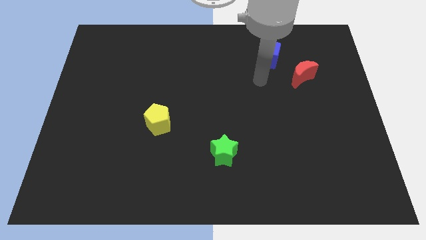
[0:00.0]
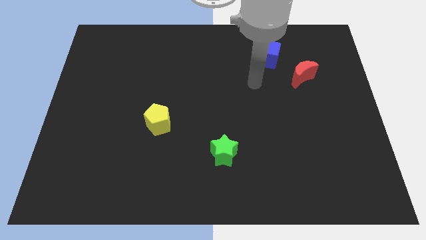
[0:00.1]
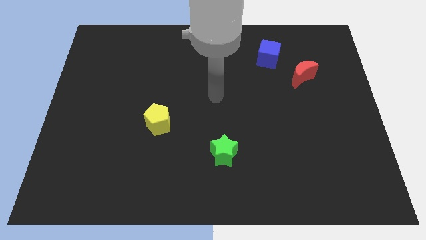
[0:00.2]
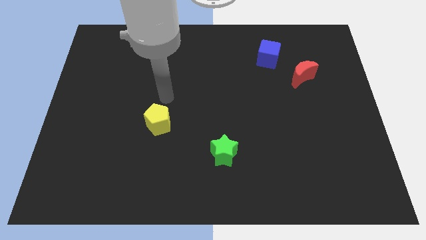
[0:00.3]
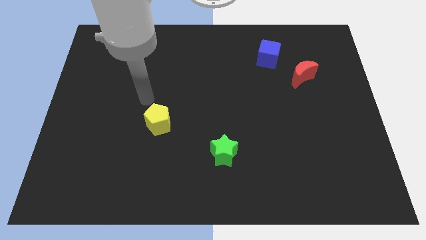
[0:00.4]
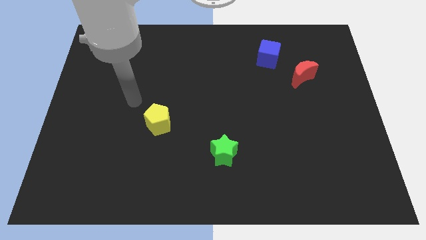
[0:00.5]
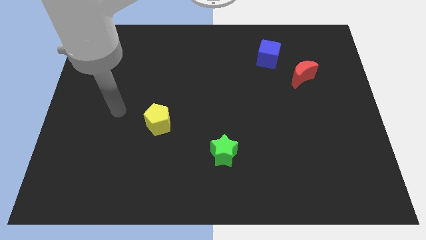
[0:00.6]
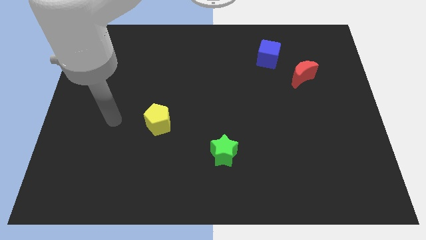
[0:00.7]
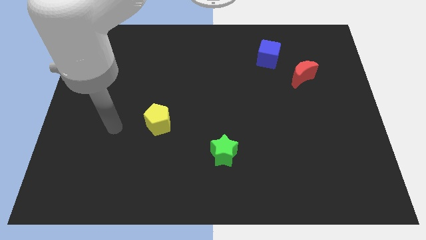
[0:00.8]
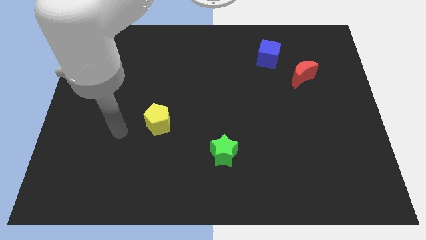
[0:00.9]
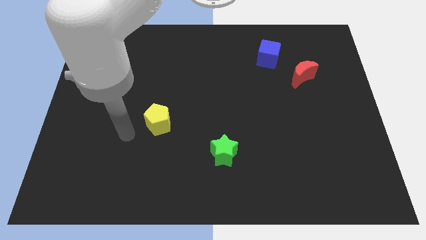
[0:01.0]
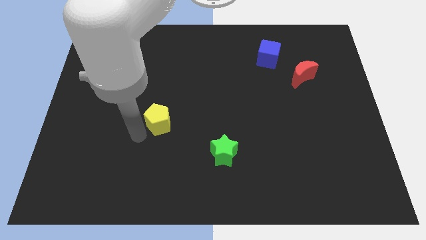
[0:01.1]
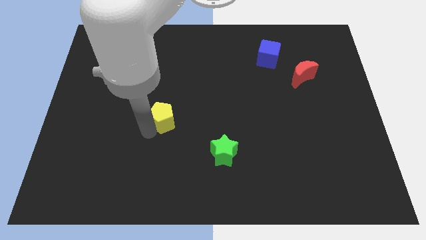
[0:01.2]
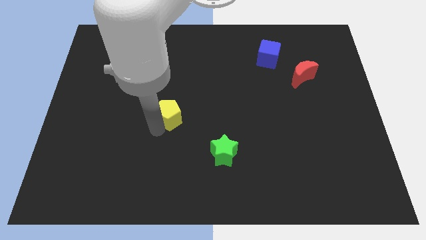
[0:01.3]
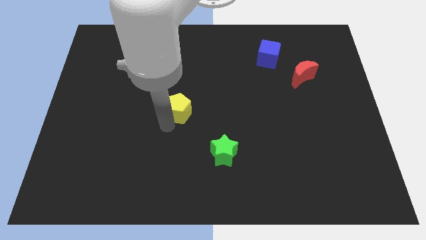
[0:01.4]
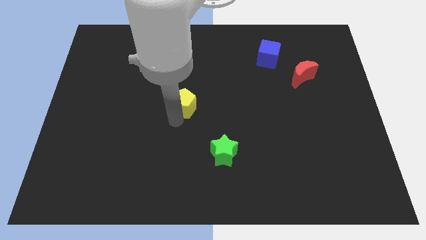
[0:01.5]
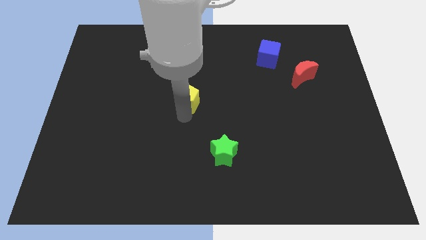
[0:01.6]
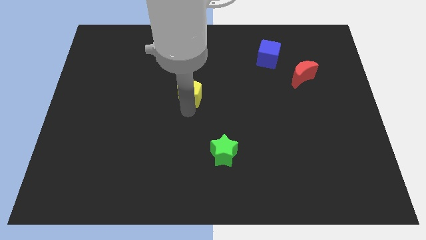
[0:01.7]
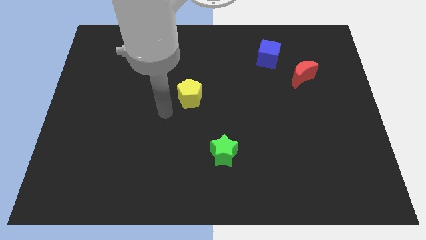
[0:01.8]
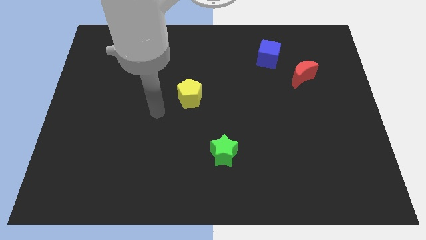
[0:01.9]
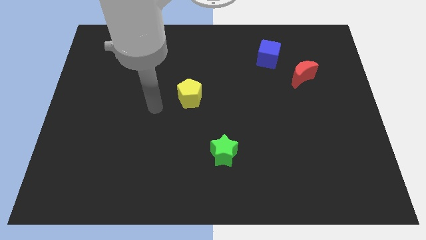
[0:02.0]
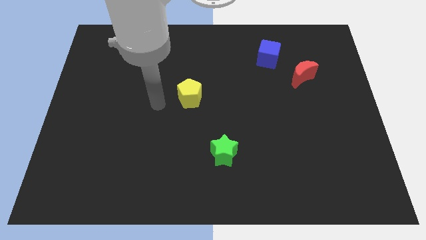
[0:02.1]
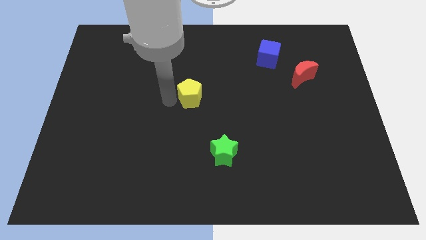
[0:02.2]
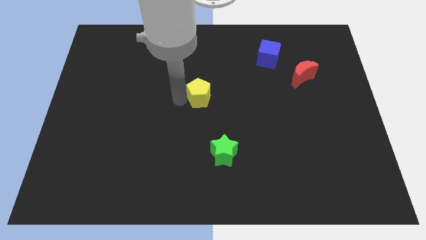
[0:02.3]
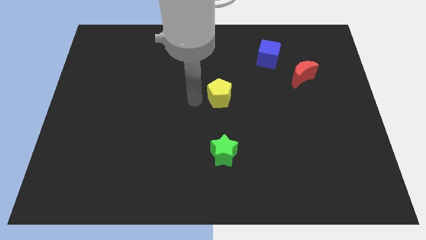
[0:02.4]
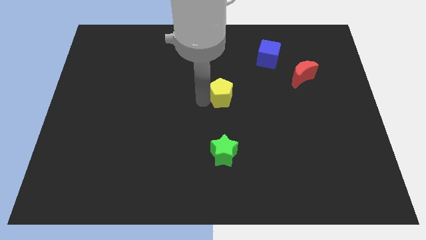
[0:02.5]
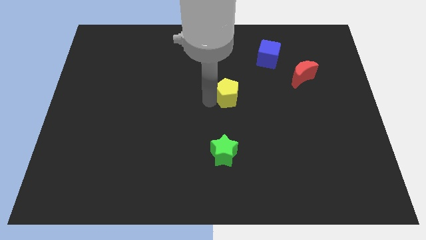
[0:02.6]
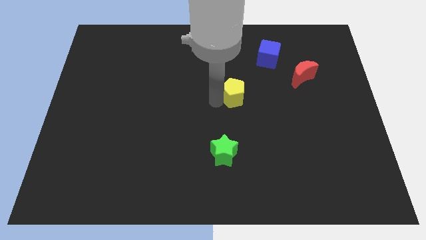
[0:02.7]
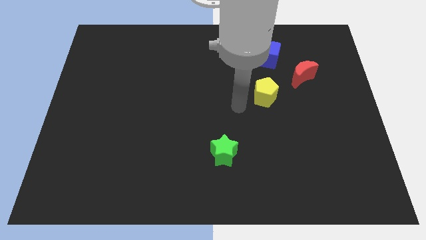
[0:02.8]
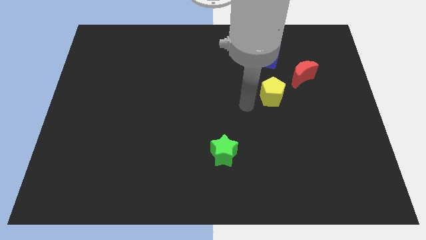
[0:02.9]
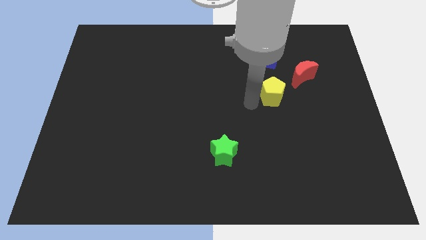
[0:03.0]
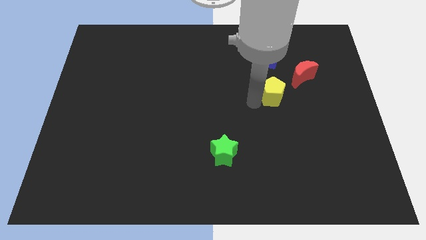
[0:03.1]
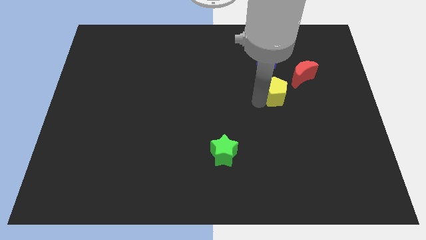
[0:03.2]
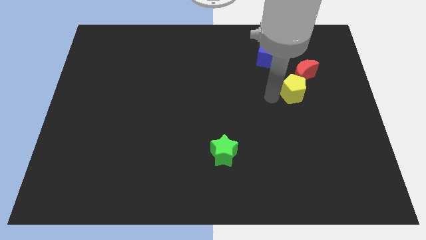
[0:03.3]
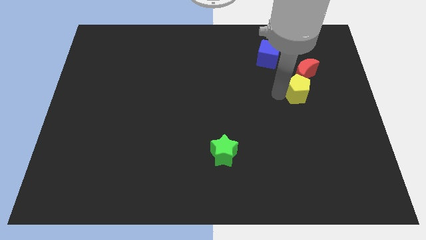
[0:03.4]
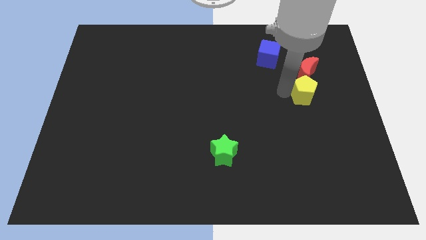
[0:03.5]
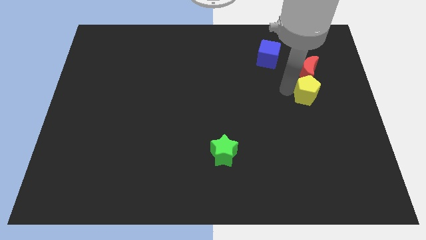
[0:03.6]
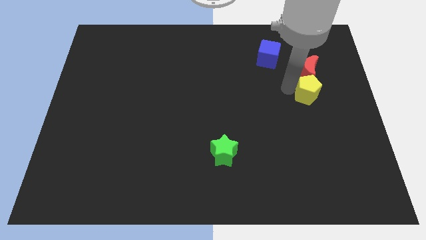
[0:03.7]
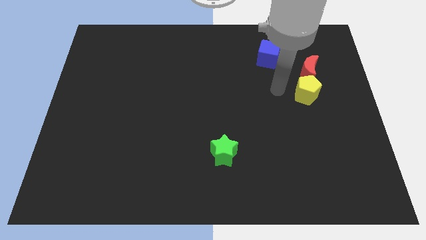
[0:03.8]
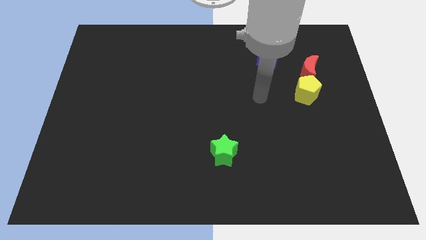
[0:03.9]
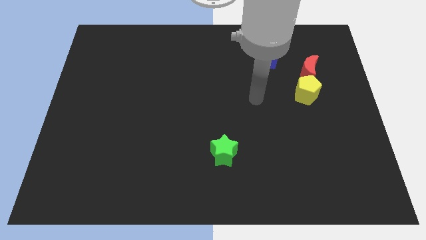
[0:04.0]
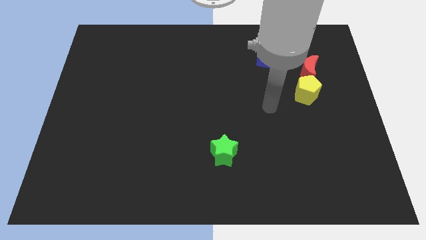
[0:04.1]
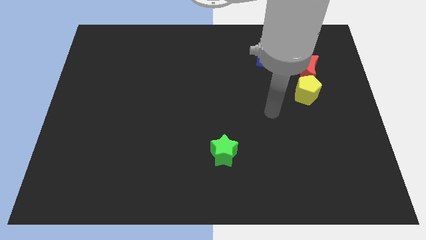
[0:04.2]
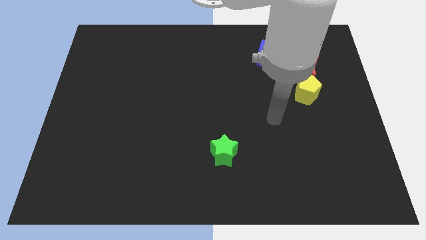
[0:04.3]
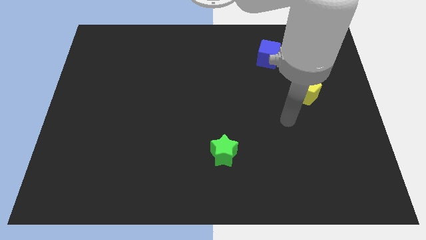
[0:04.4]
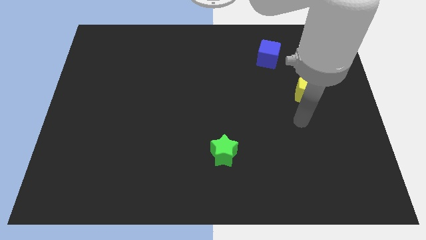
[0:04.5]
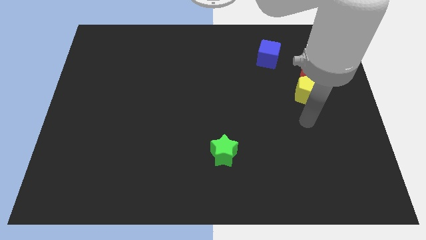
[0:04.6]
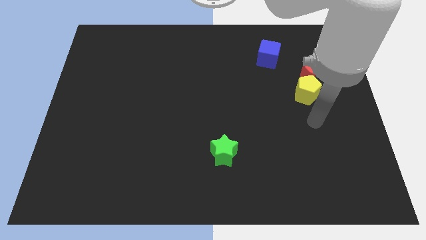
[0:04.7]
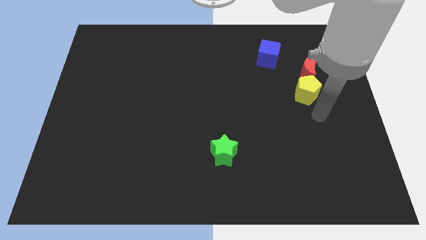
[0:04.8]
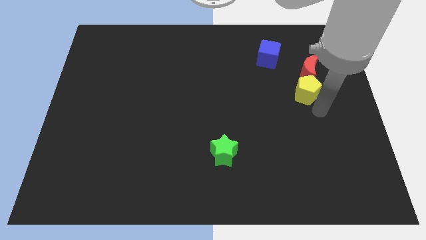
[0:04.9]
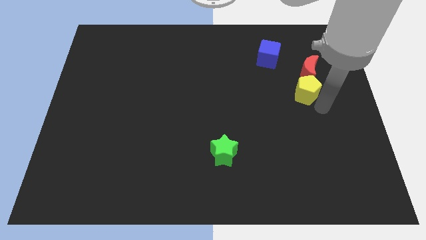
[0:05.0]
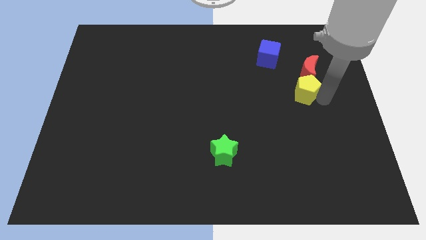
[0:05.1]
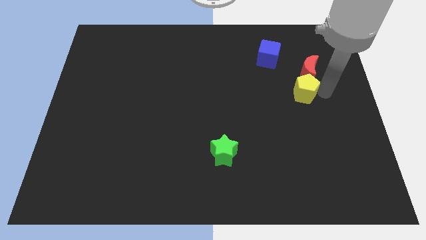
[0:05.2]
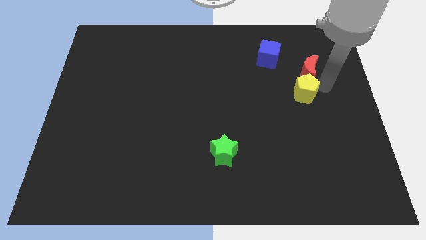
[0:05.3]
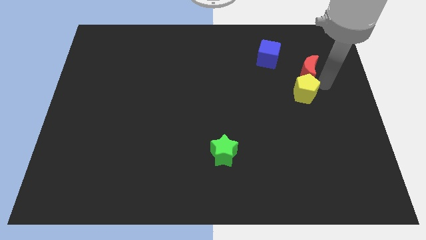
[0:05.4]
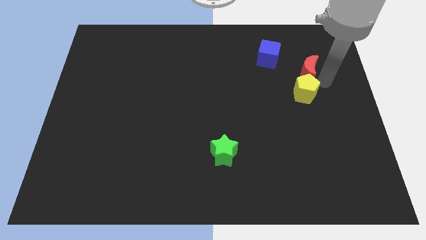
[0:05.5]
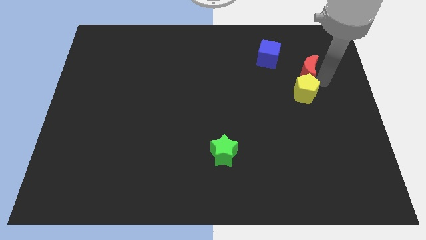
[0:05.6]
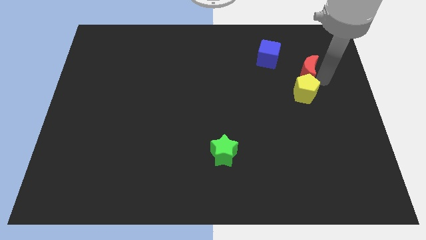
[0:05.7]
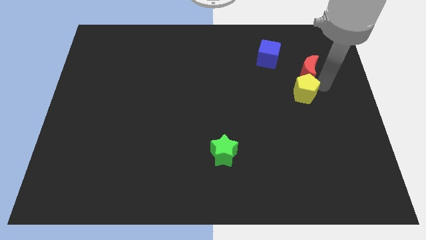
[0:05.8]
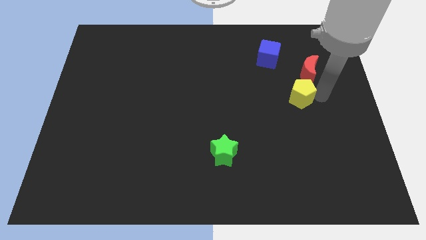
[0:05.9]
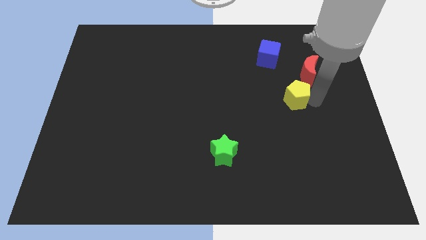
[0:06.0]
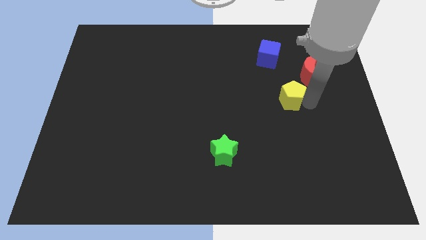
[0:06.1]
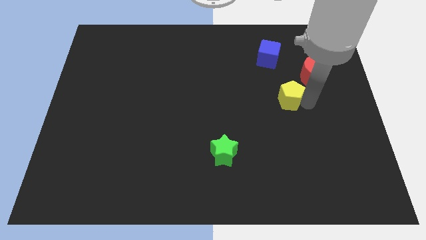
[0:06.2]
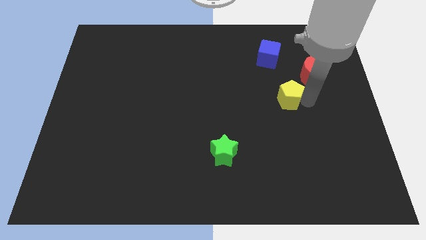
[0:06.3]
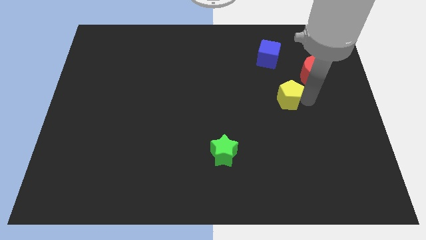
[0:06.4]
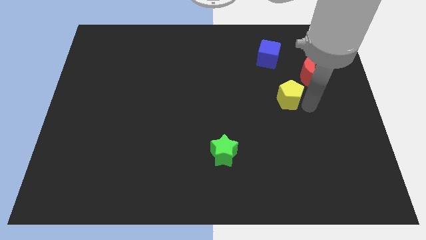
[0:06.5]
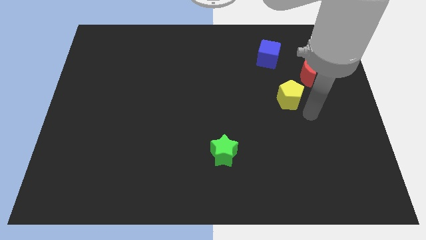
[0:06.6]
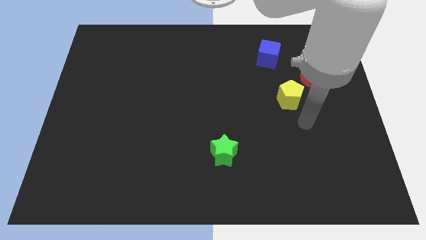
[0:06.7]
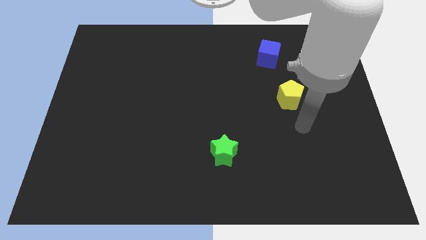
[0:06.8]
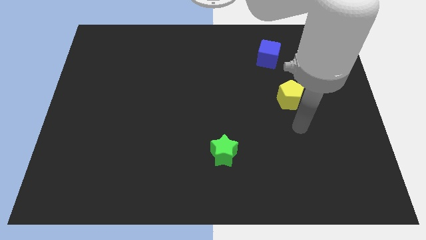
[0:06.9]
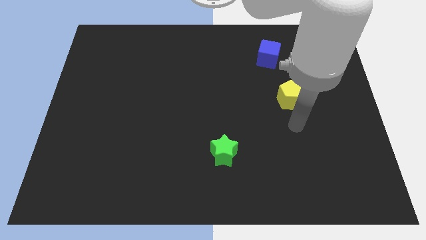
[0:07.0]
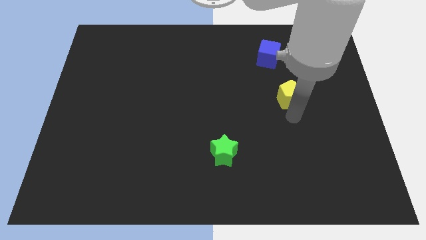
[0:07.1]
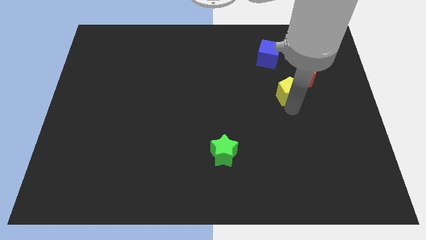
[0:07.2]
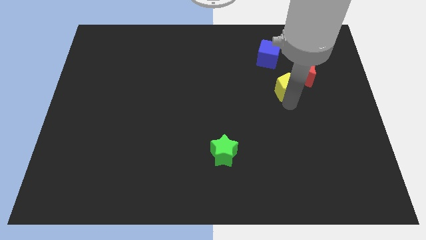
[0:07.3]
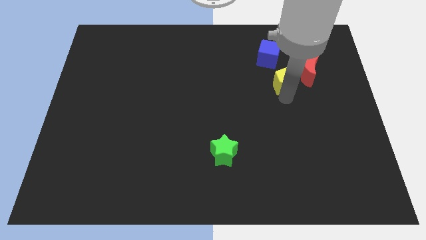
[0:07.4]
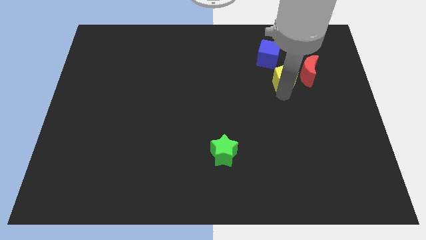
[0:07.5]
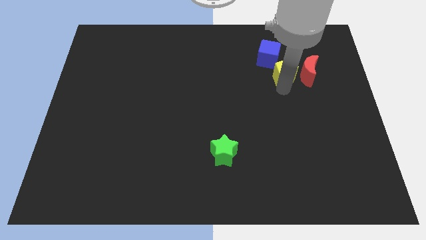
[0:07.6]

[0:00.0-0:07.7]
slide the pentagon close to the red moon

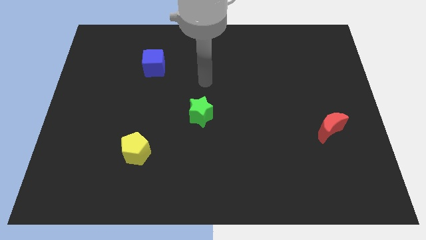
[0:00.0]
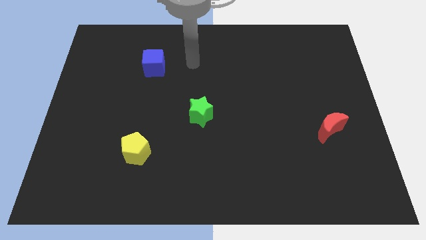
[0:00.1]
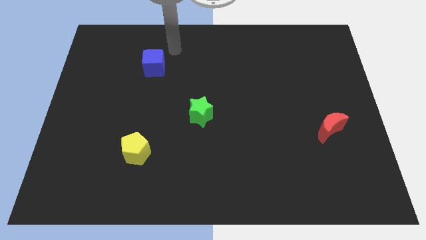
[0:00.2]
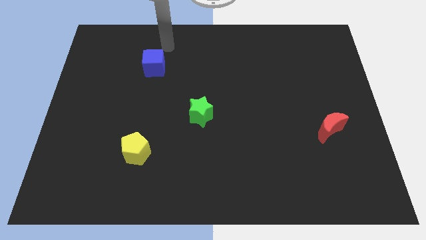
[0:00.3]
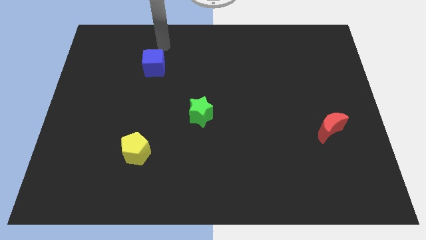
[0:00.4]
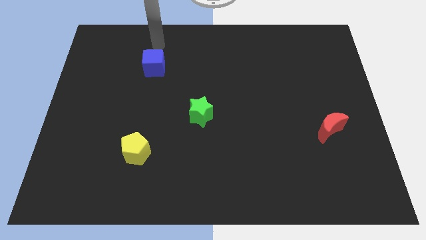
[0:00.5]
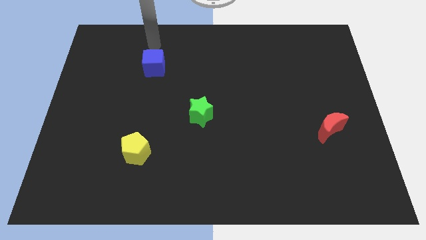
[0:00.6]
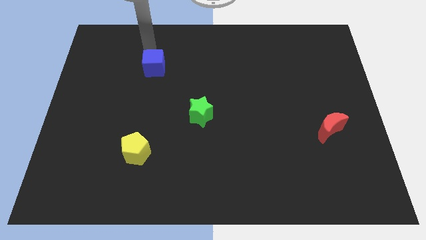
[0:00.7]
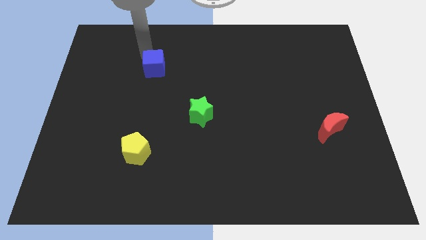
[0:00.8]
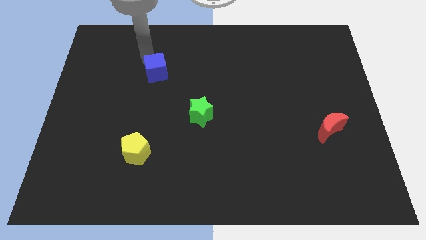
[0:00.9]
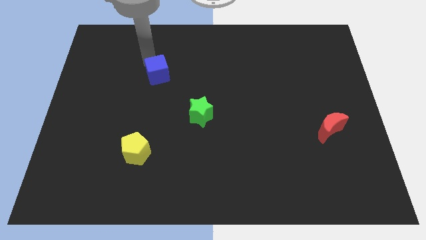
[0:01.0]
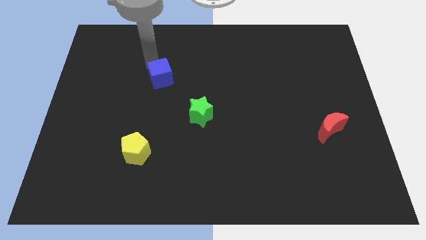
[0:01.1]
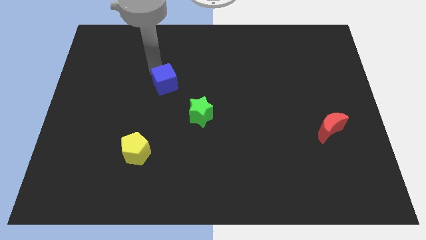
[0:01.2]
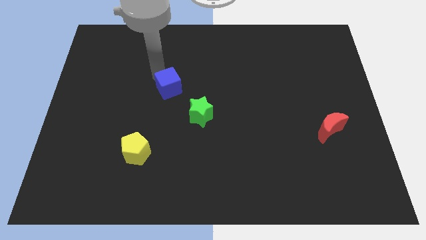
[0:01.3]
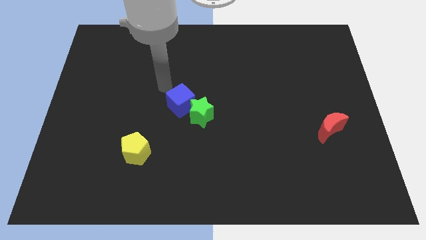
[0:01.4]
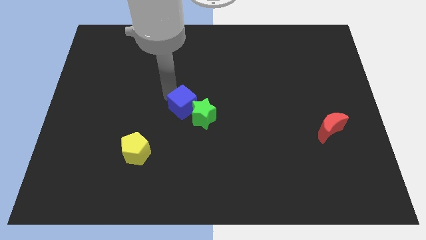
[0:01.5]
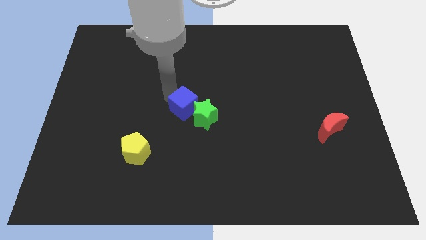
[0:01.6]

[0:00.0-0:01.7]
move the cube to the green block
